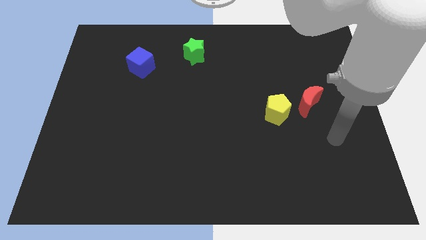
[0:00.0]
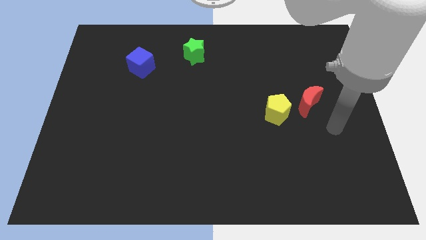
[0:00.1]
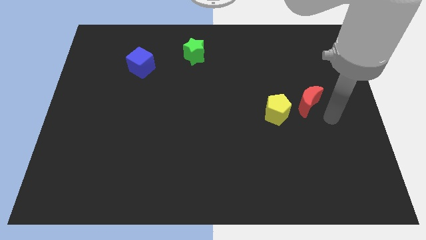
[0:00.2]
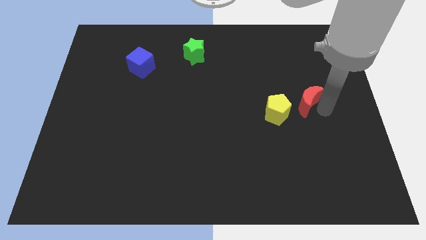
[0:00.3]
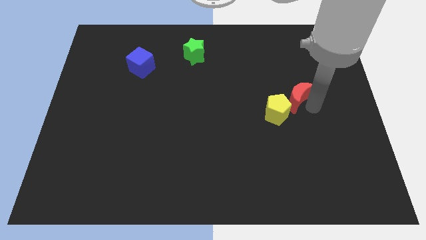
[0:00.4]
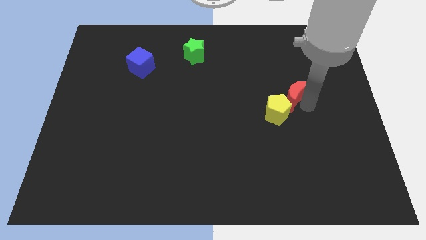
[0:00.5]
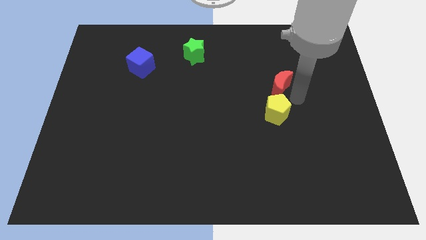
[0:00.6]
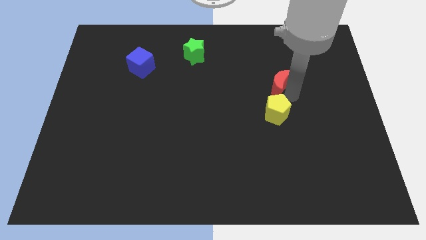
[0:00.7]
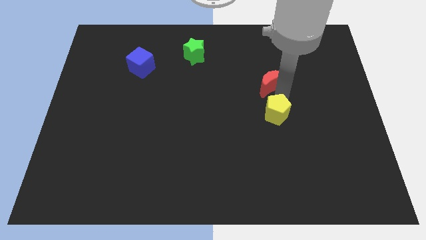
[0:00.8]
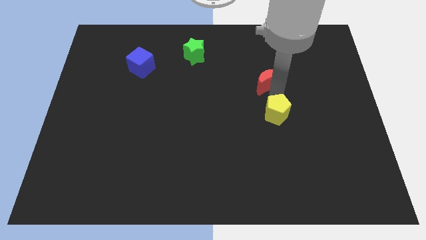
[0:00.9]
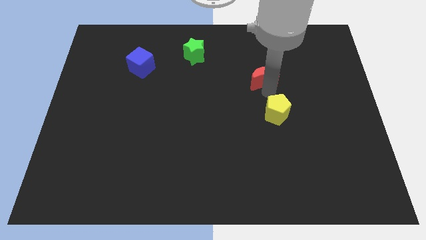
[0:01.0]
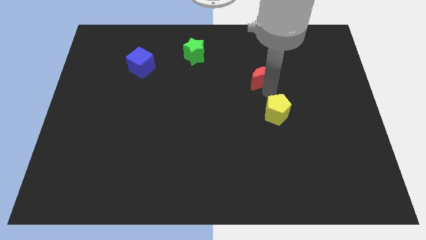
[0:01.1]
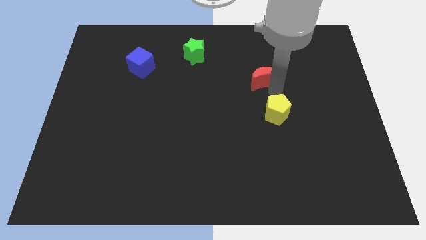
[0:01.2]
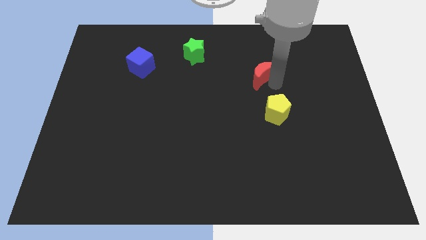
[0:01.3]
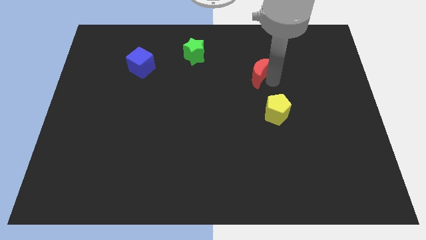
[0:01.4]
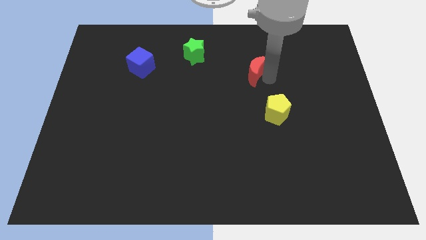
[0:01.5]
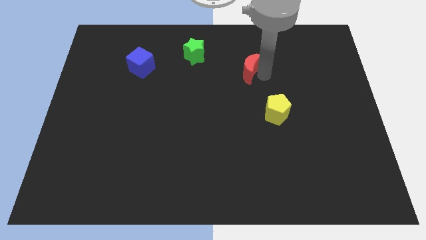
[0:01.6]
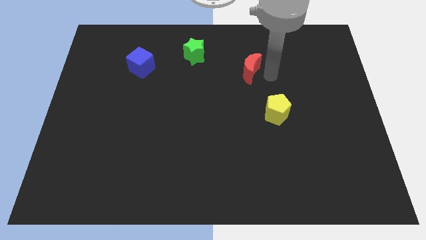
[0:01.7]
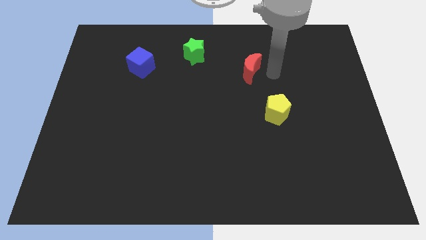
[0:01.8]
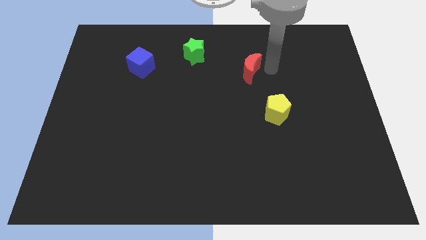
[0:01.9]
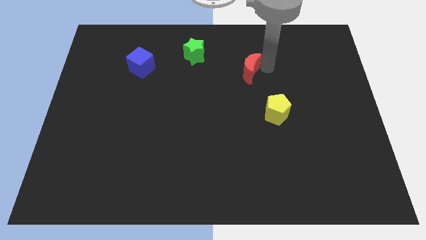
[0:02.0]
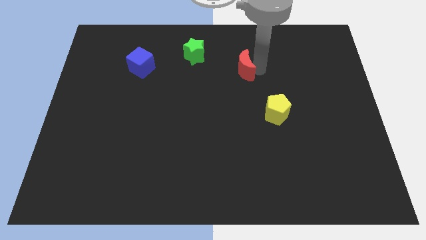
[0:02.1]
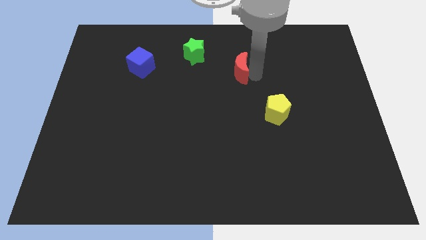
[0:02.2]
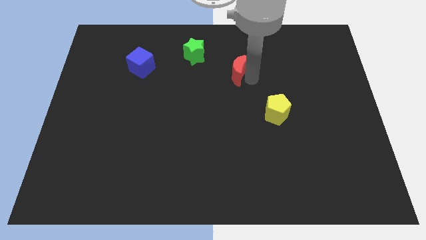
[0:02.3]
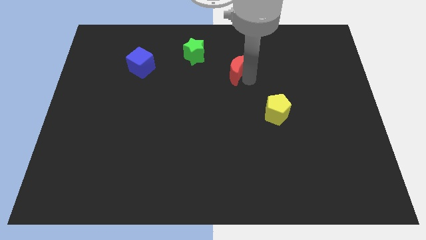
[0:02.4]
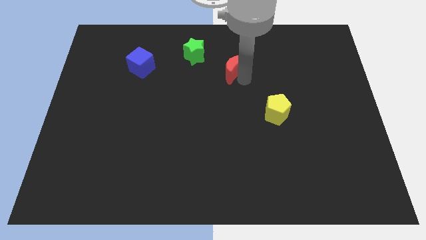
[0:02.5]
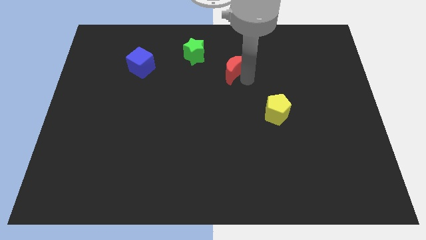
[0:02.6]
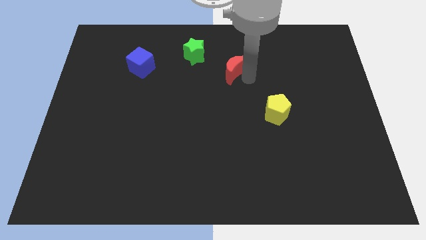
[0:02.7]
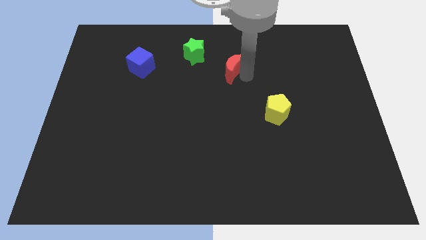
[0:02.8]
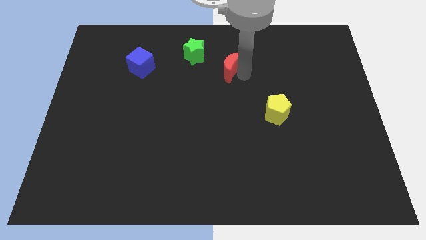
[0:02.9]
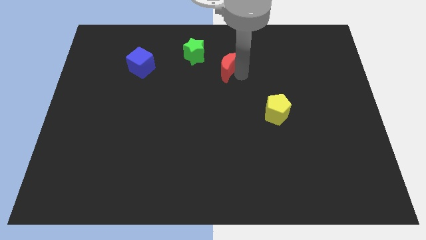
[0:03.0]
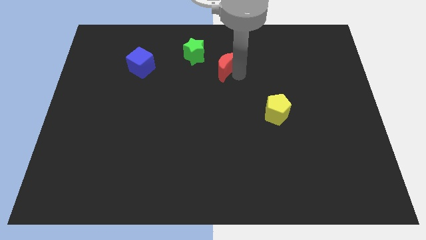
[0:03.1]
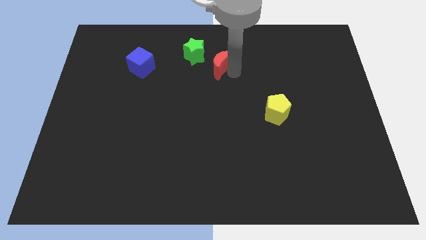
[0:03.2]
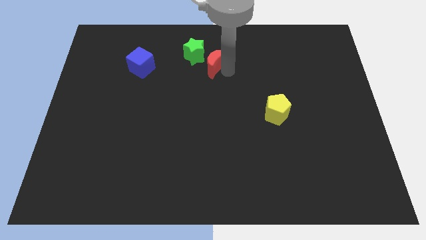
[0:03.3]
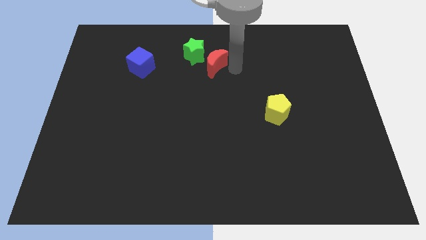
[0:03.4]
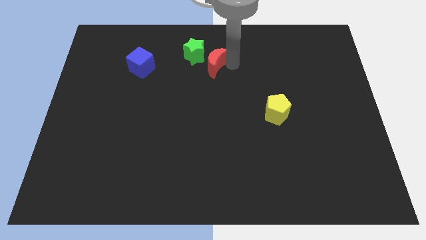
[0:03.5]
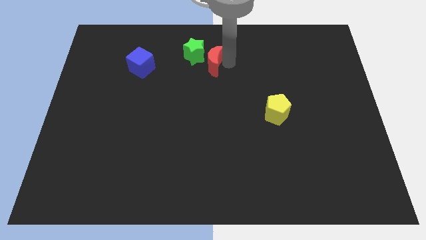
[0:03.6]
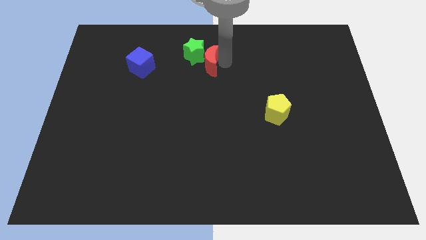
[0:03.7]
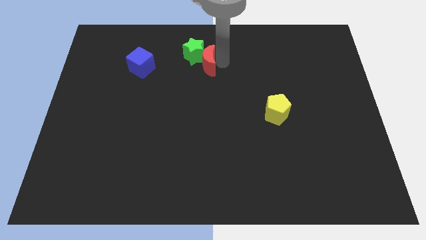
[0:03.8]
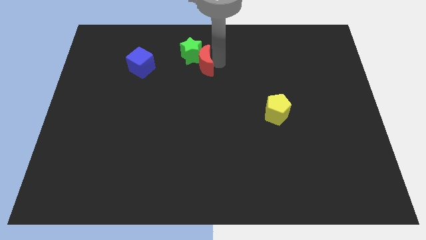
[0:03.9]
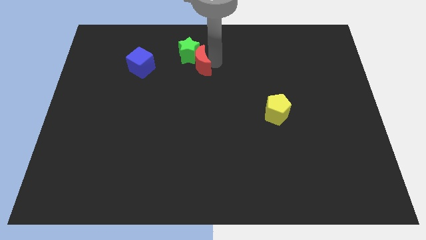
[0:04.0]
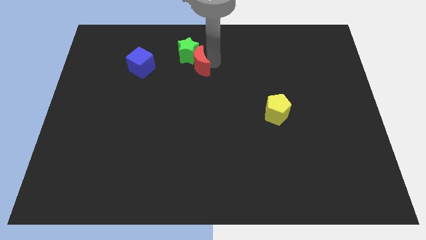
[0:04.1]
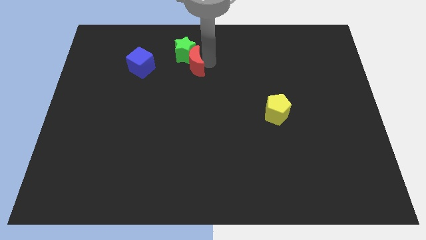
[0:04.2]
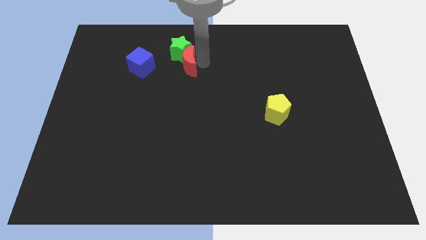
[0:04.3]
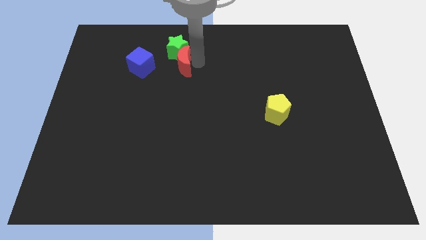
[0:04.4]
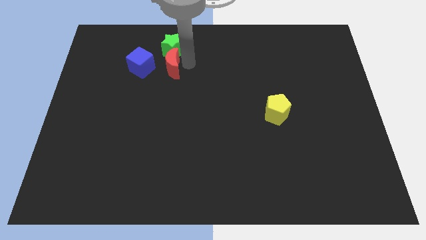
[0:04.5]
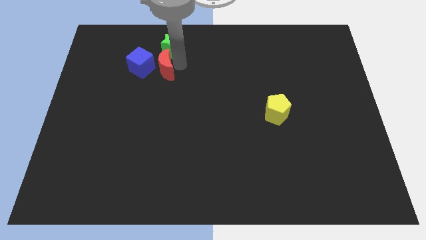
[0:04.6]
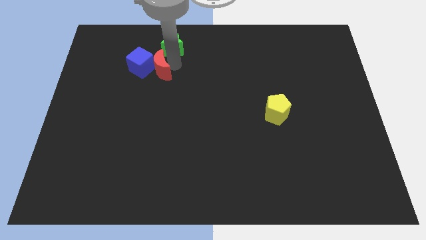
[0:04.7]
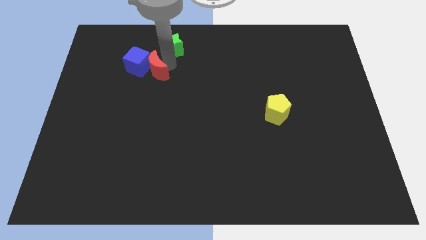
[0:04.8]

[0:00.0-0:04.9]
put the moon next to the cube

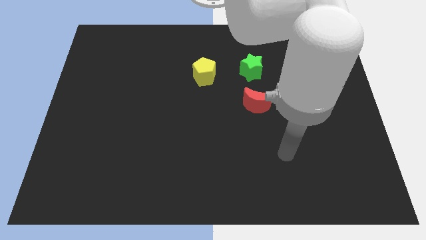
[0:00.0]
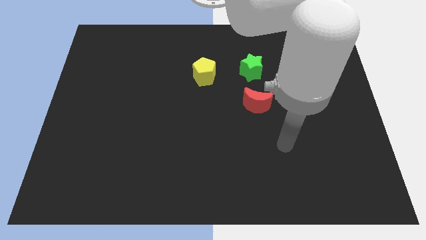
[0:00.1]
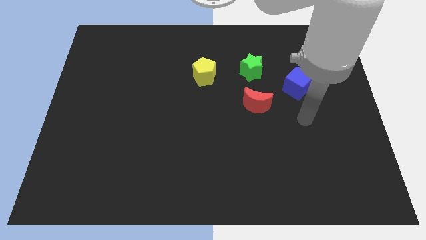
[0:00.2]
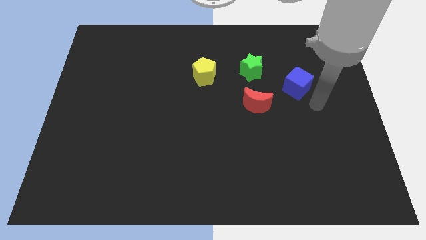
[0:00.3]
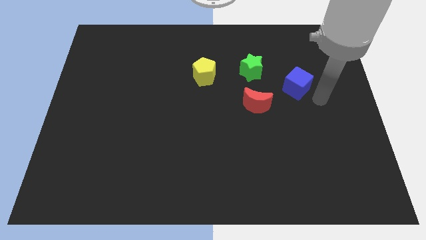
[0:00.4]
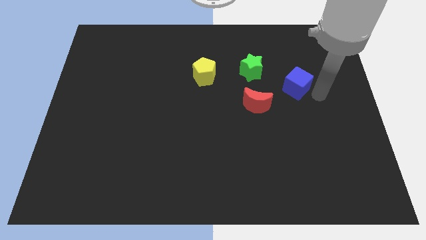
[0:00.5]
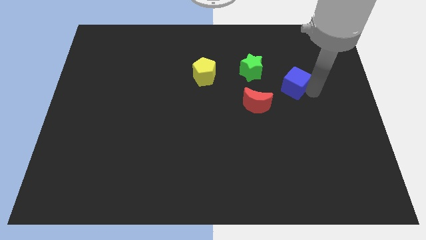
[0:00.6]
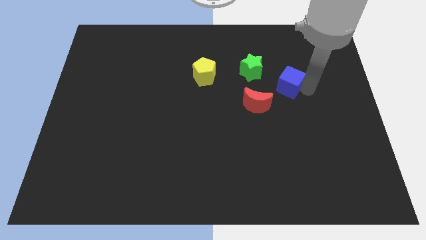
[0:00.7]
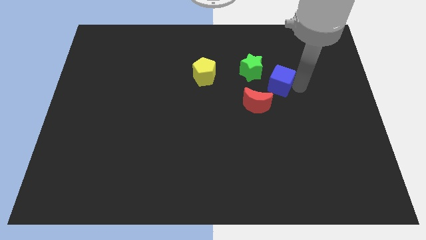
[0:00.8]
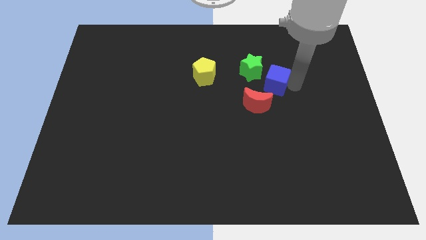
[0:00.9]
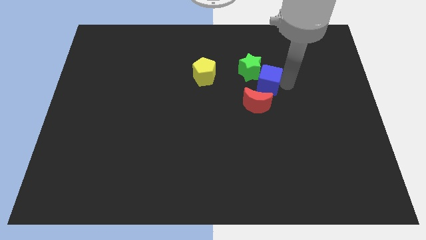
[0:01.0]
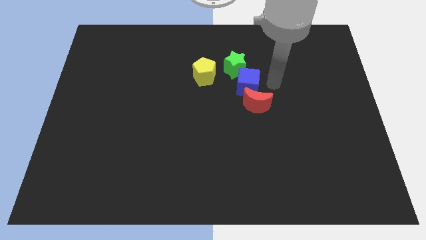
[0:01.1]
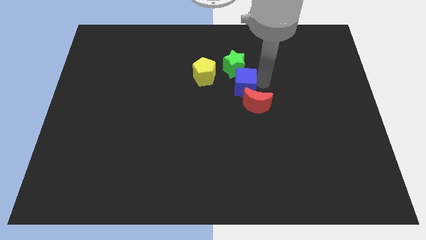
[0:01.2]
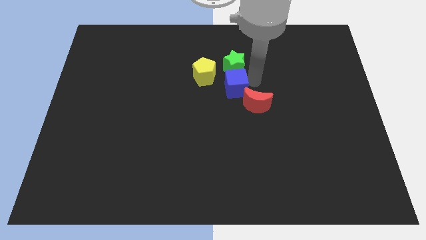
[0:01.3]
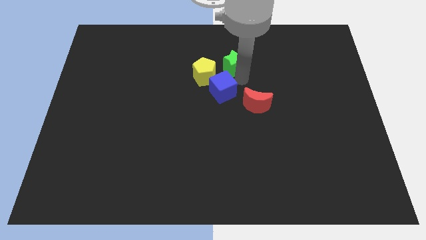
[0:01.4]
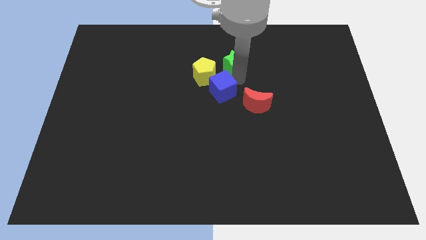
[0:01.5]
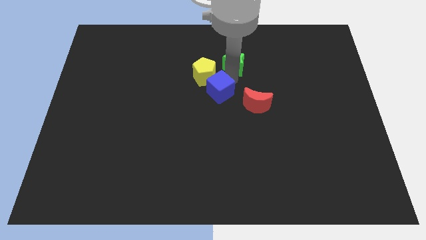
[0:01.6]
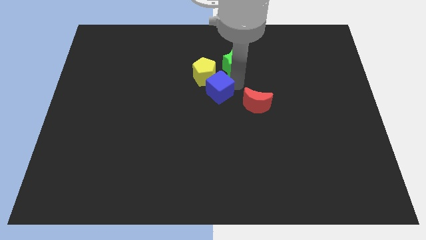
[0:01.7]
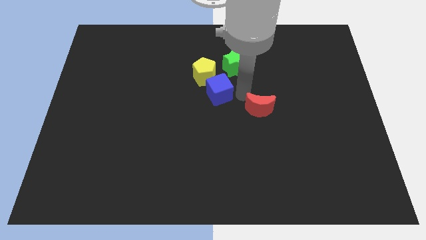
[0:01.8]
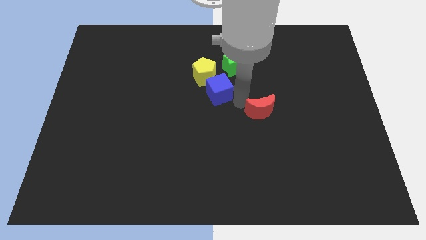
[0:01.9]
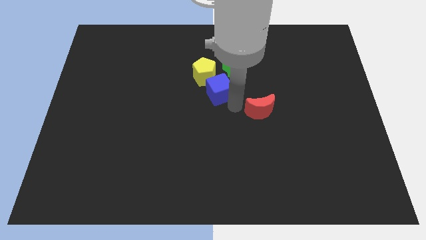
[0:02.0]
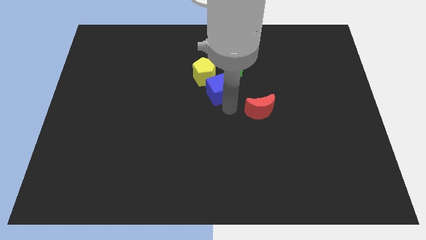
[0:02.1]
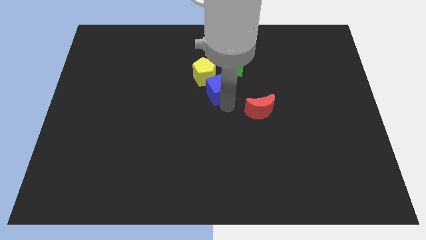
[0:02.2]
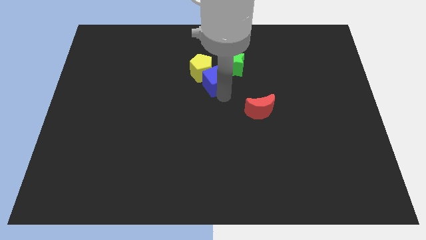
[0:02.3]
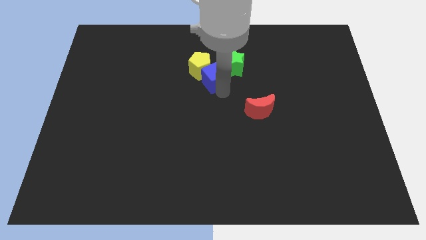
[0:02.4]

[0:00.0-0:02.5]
slide the blue cube towards the yellow block

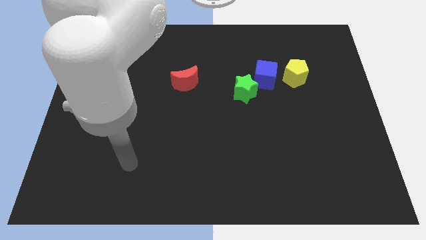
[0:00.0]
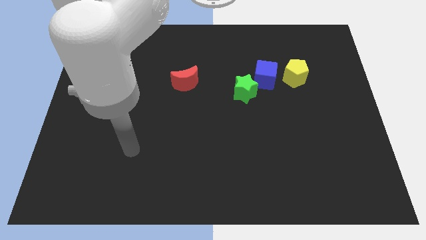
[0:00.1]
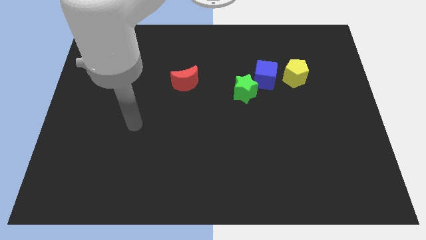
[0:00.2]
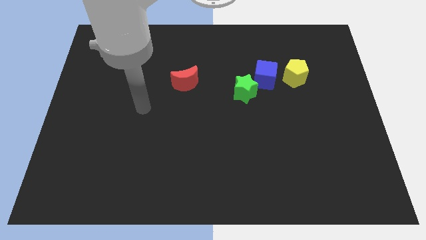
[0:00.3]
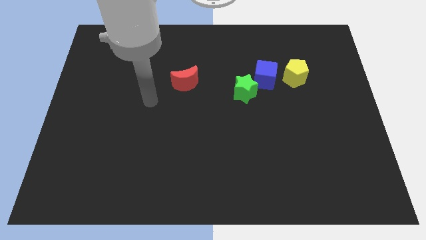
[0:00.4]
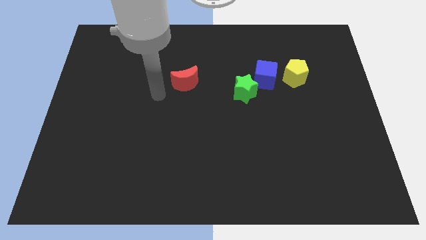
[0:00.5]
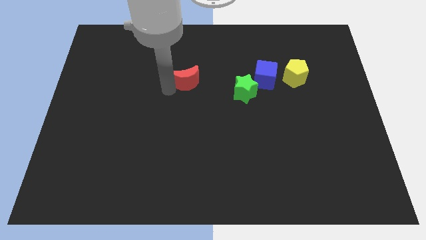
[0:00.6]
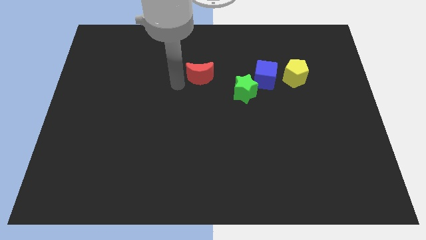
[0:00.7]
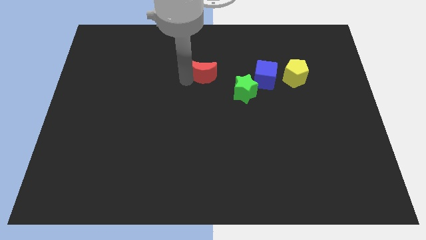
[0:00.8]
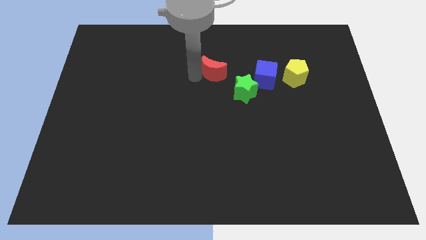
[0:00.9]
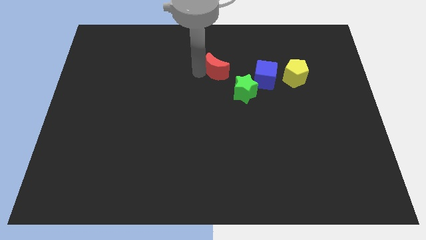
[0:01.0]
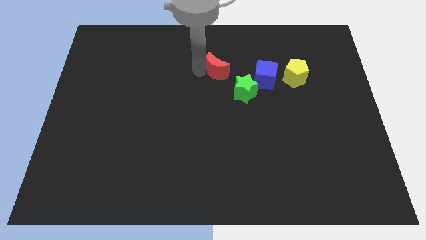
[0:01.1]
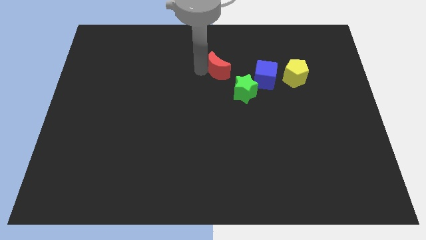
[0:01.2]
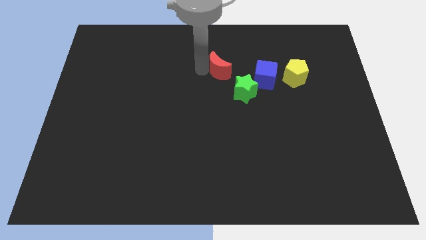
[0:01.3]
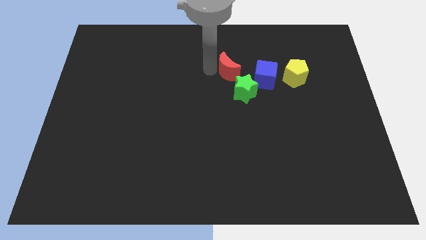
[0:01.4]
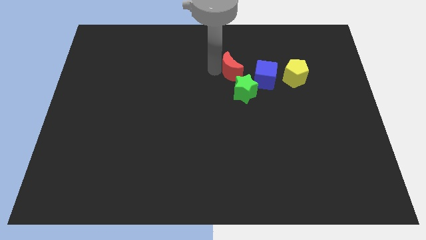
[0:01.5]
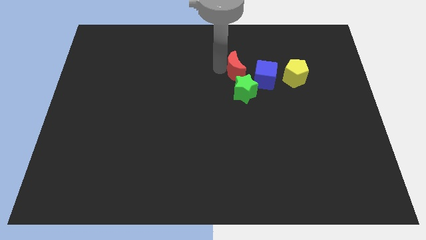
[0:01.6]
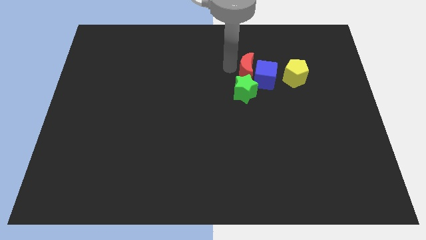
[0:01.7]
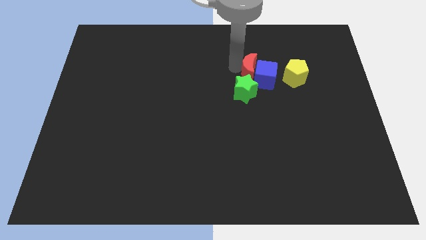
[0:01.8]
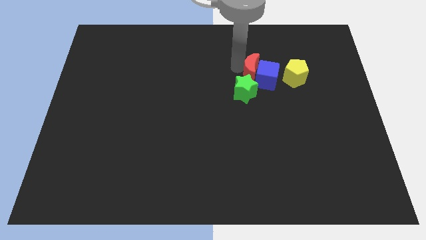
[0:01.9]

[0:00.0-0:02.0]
slide the red block to the blue cube
